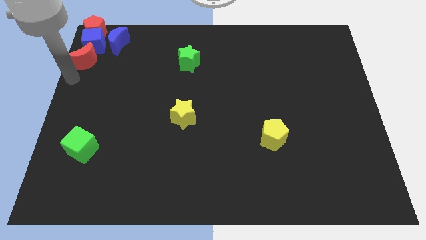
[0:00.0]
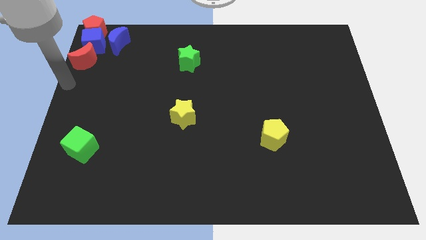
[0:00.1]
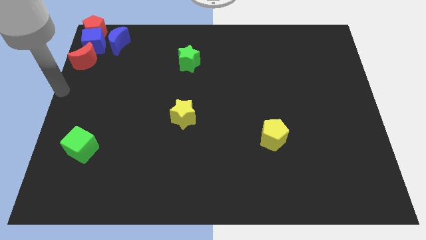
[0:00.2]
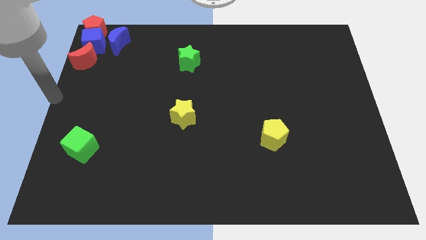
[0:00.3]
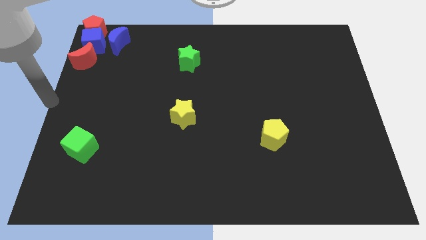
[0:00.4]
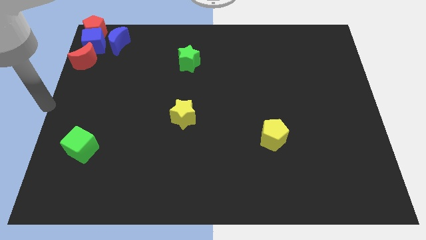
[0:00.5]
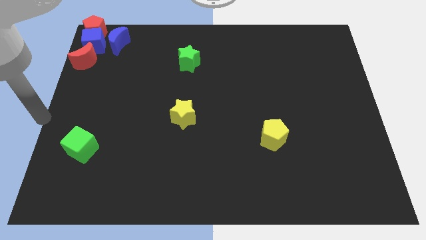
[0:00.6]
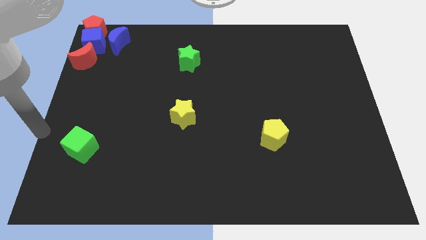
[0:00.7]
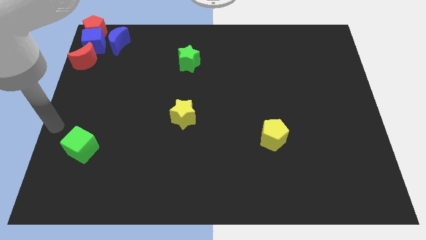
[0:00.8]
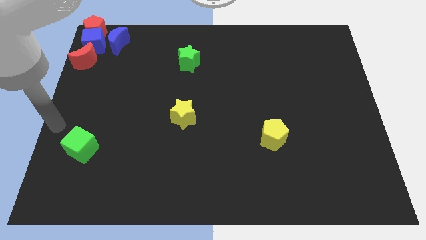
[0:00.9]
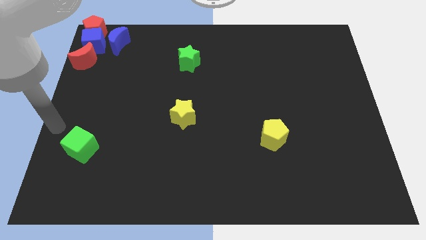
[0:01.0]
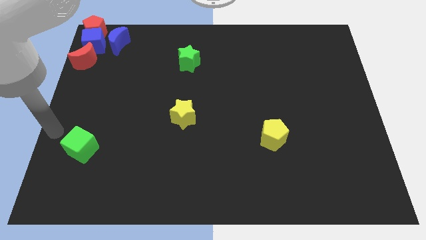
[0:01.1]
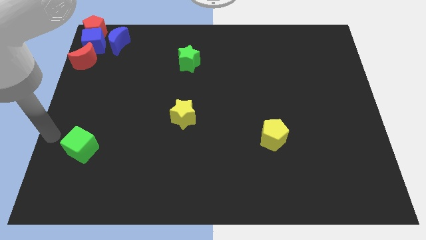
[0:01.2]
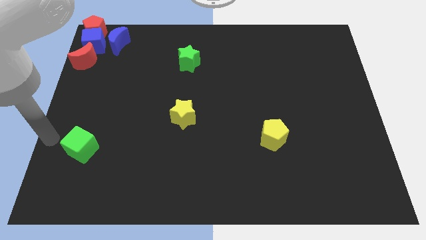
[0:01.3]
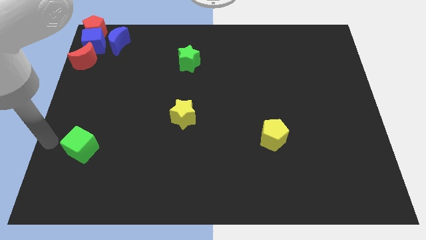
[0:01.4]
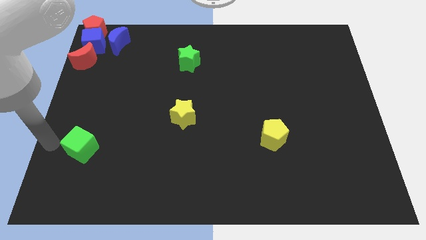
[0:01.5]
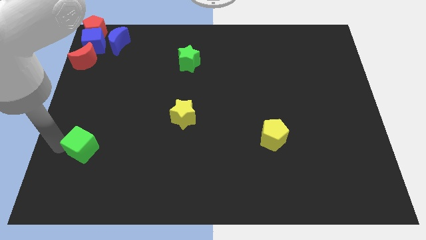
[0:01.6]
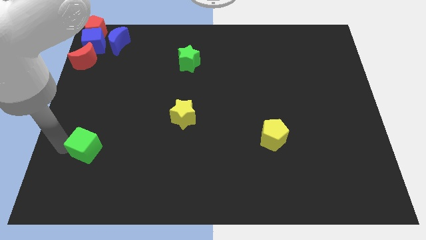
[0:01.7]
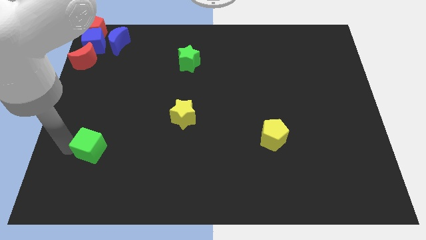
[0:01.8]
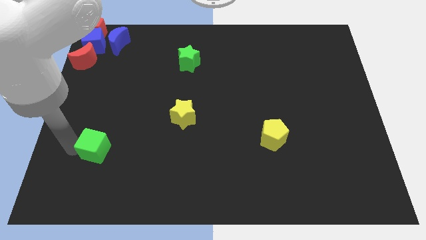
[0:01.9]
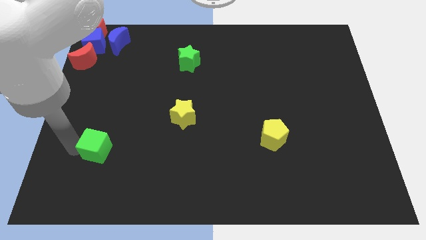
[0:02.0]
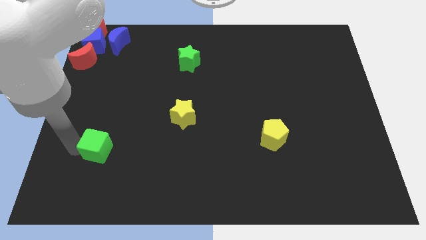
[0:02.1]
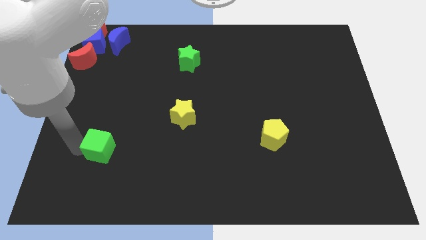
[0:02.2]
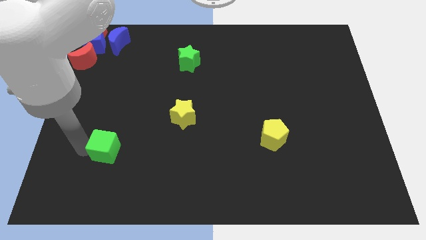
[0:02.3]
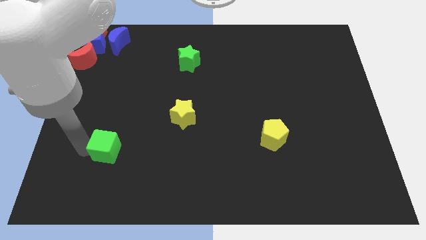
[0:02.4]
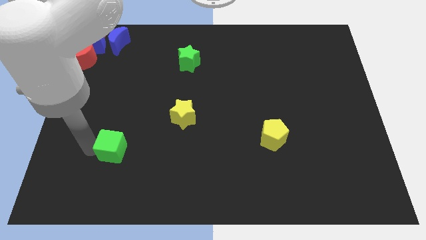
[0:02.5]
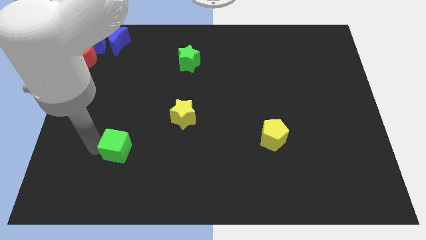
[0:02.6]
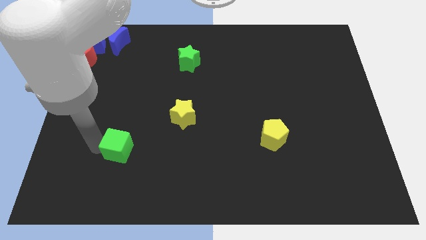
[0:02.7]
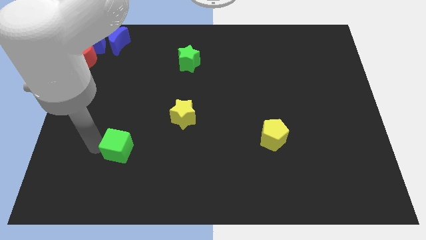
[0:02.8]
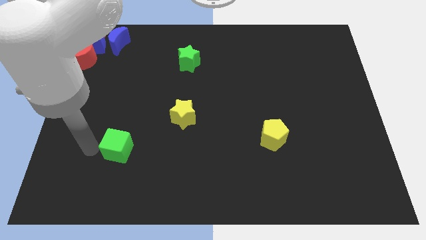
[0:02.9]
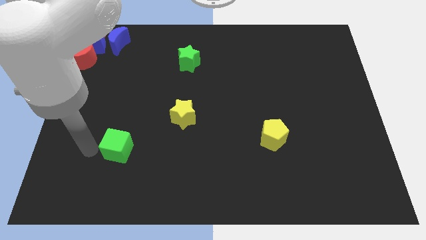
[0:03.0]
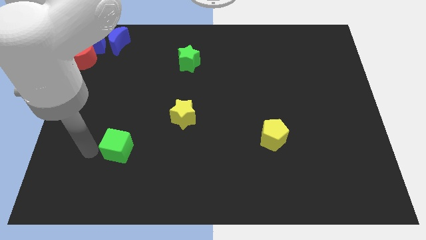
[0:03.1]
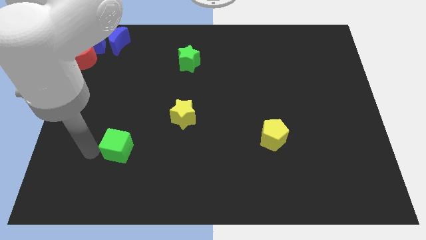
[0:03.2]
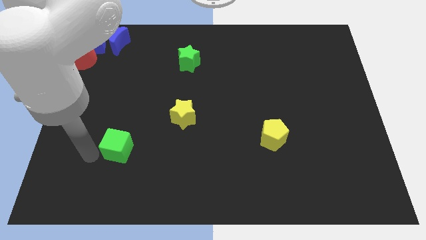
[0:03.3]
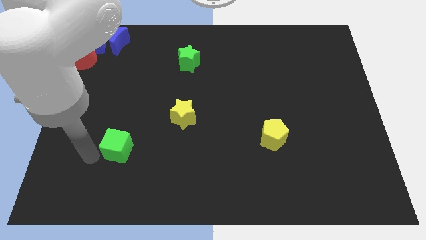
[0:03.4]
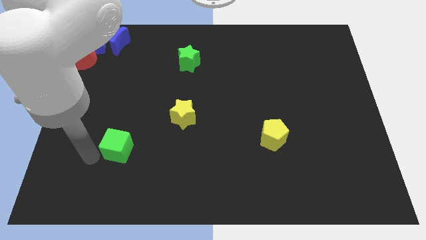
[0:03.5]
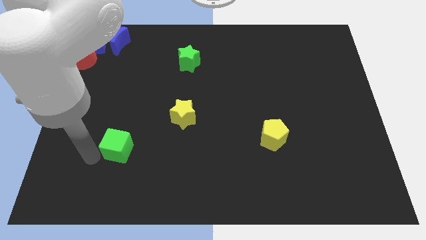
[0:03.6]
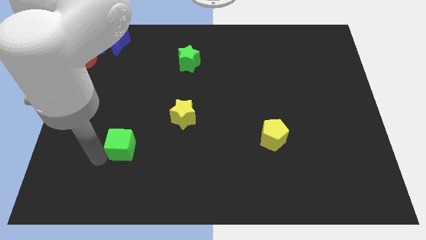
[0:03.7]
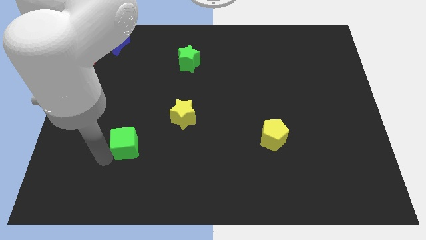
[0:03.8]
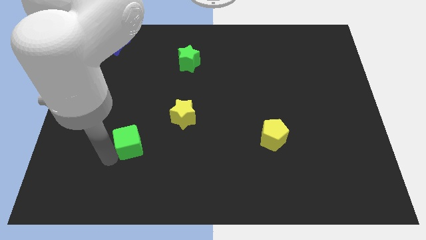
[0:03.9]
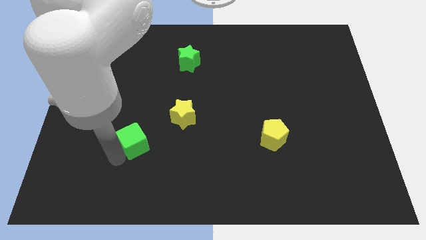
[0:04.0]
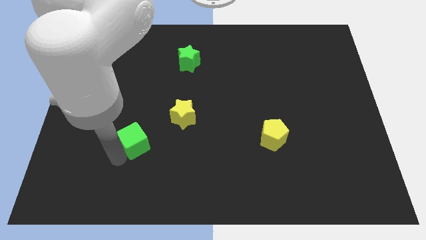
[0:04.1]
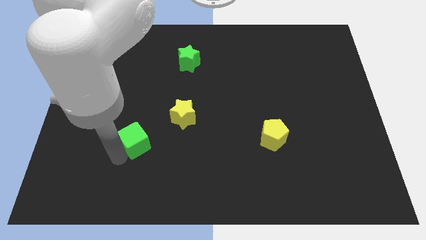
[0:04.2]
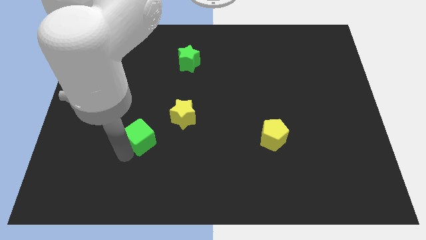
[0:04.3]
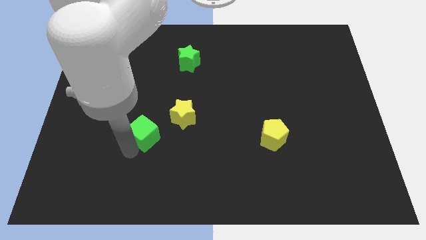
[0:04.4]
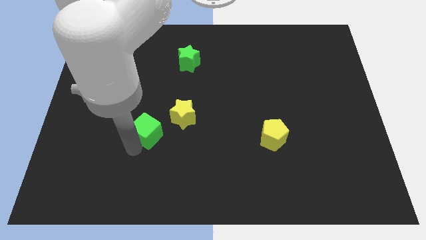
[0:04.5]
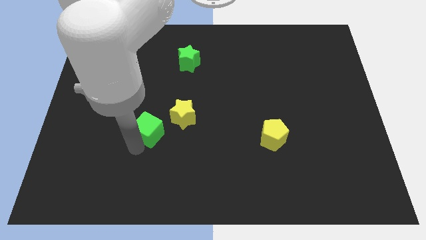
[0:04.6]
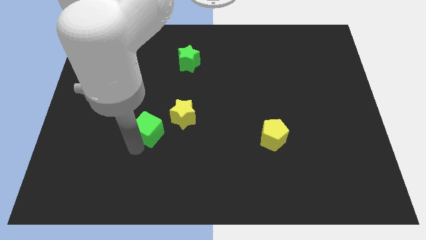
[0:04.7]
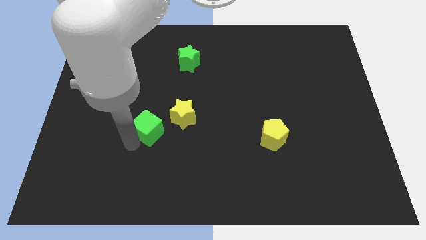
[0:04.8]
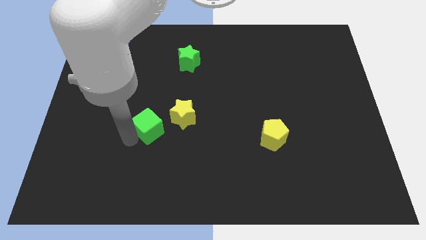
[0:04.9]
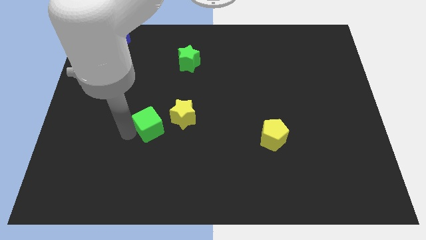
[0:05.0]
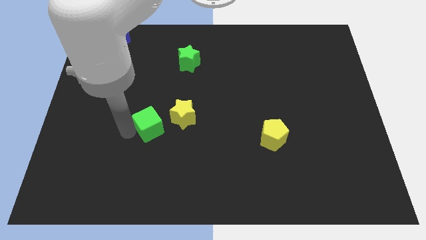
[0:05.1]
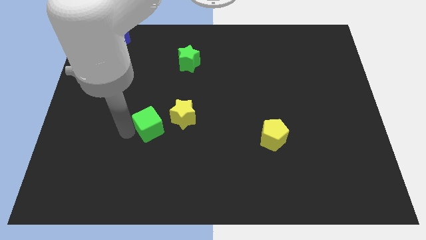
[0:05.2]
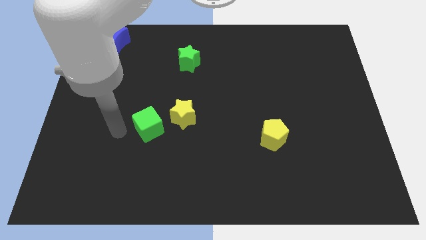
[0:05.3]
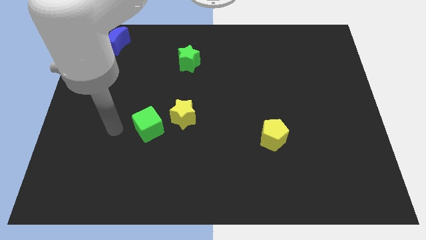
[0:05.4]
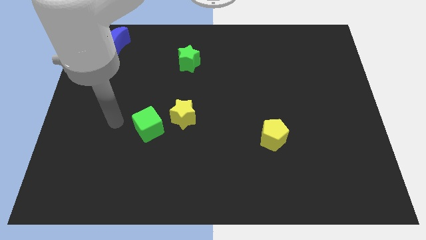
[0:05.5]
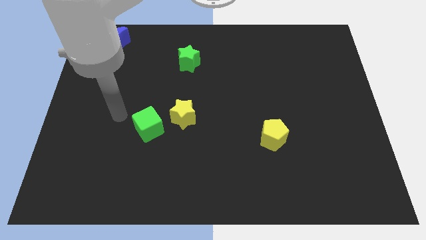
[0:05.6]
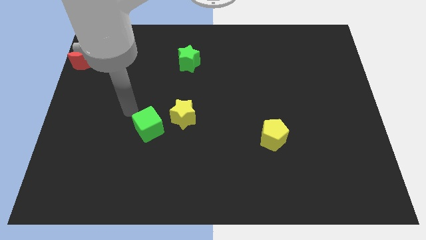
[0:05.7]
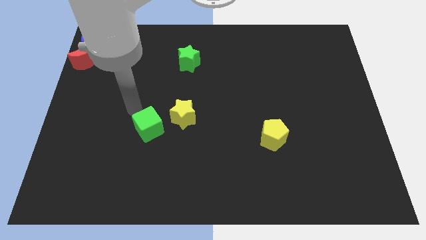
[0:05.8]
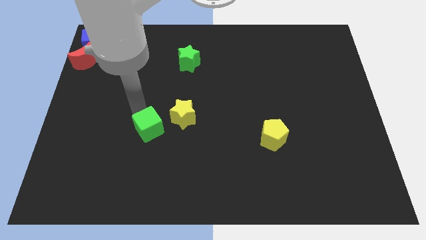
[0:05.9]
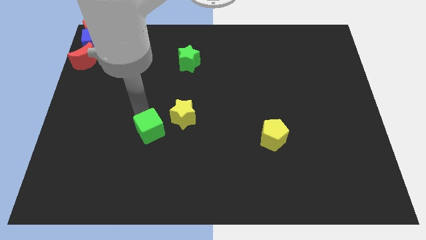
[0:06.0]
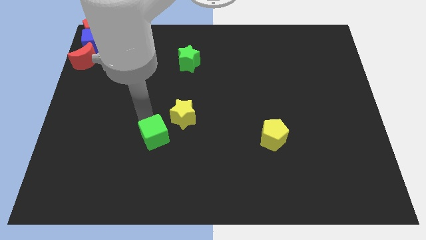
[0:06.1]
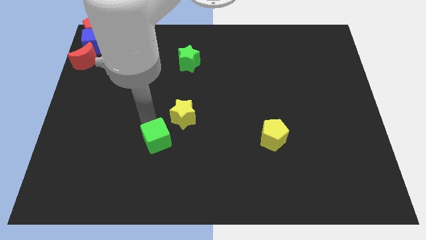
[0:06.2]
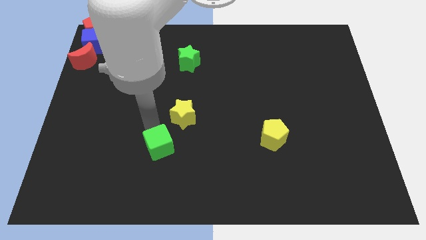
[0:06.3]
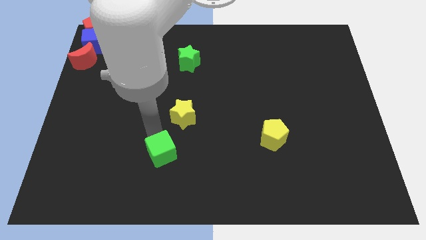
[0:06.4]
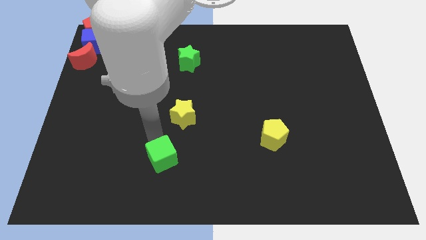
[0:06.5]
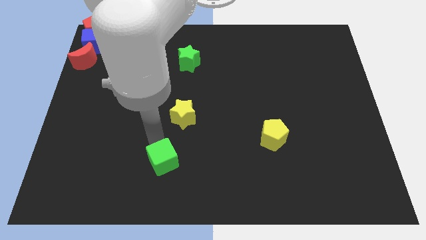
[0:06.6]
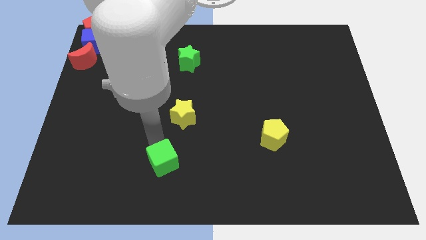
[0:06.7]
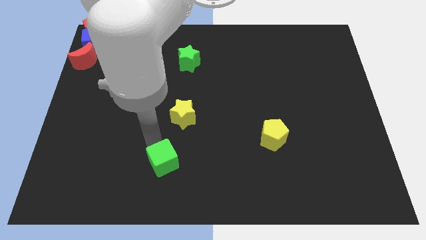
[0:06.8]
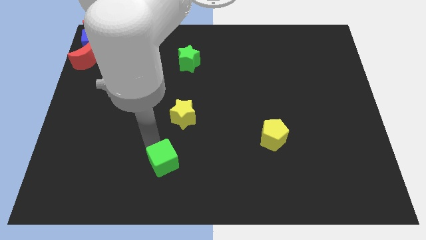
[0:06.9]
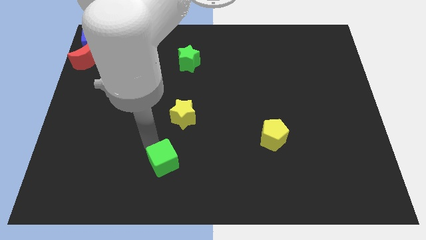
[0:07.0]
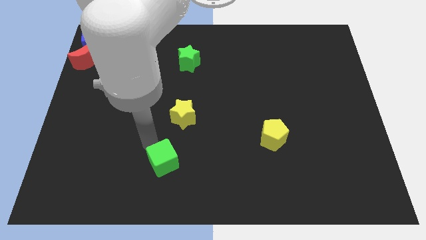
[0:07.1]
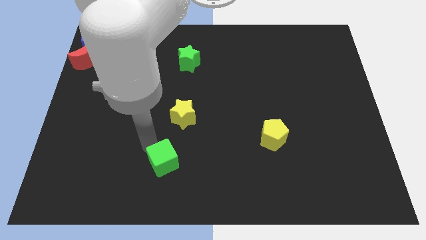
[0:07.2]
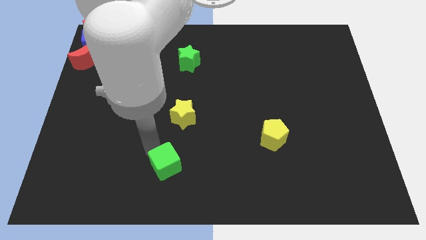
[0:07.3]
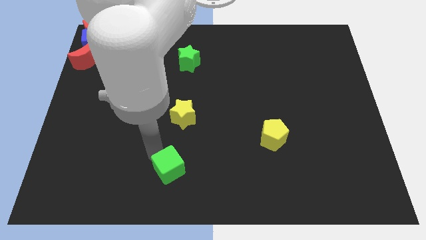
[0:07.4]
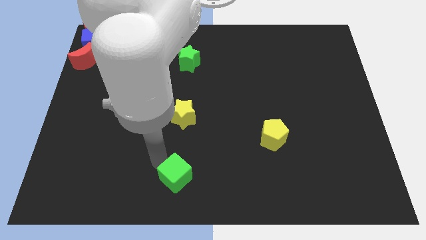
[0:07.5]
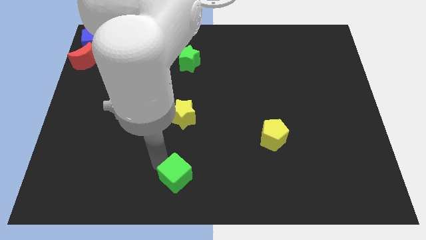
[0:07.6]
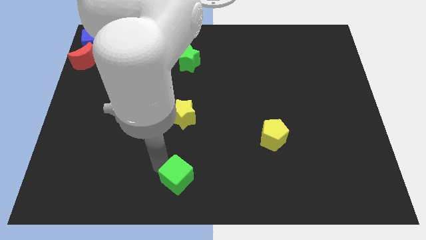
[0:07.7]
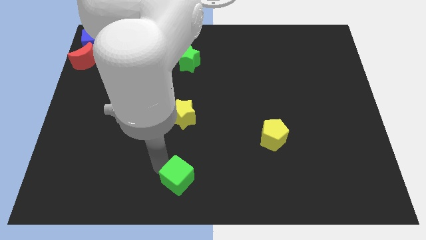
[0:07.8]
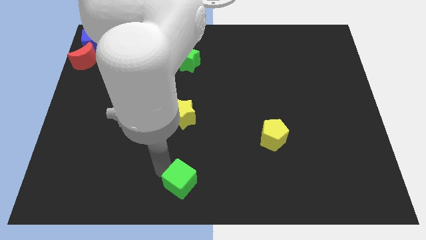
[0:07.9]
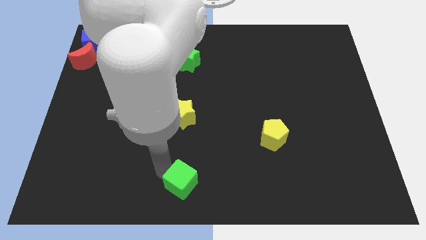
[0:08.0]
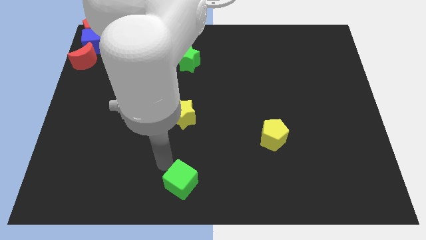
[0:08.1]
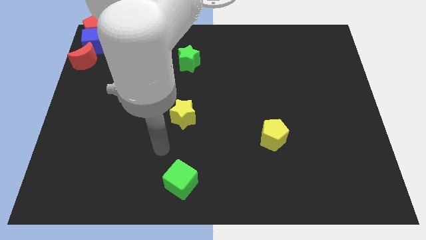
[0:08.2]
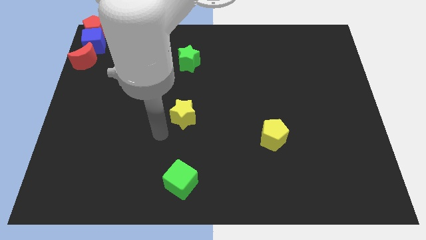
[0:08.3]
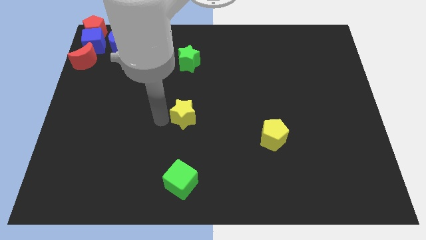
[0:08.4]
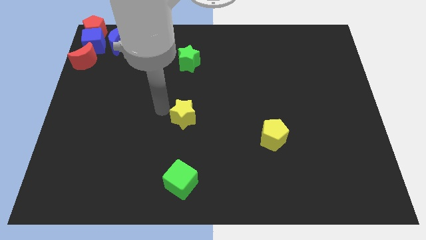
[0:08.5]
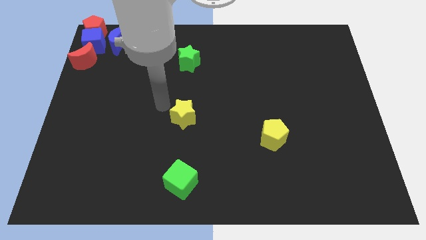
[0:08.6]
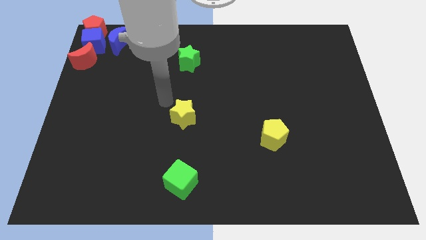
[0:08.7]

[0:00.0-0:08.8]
move the green cube to the bottom of the yellow star

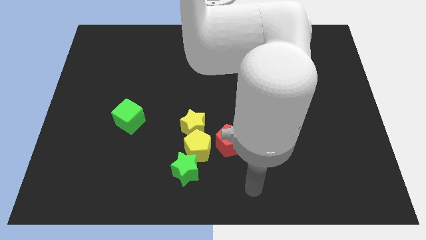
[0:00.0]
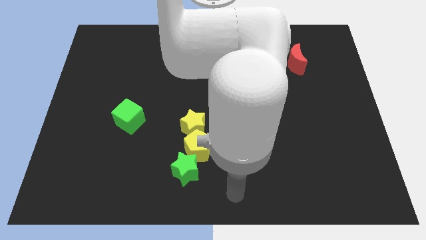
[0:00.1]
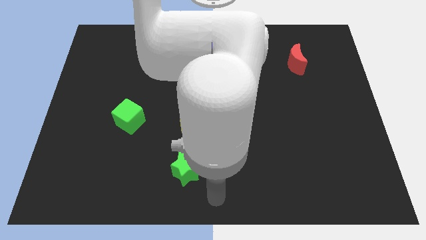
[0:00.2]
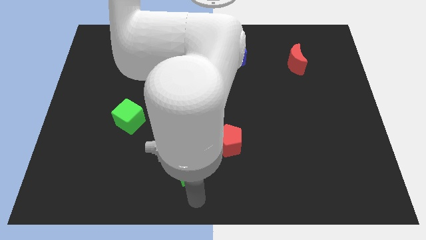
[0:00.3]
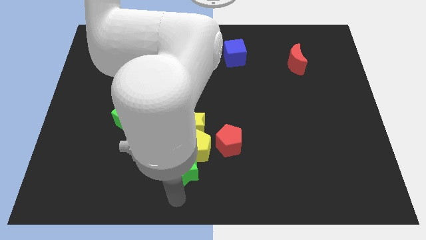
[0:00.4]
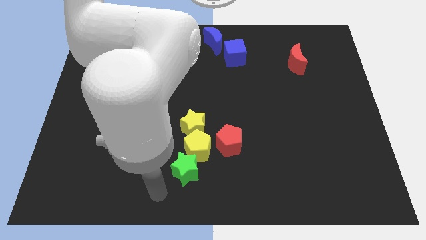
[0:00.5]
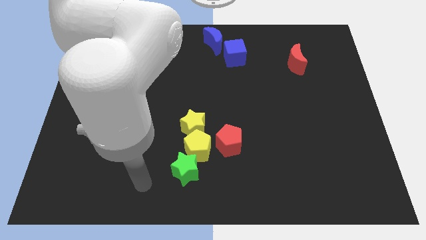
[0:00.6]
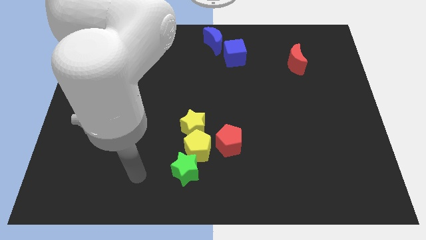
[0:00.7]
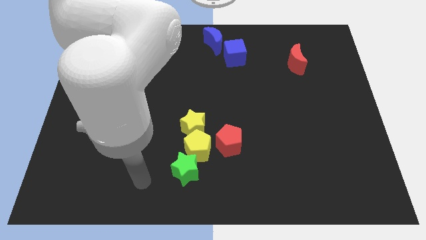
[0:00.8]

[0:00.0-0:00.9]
point the arm to the left of the green star
